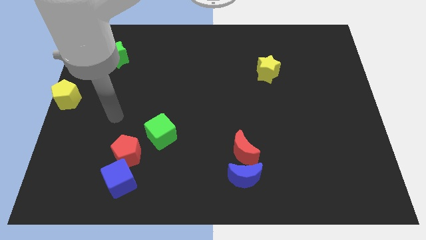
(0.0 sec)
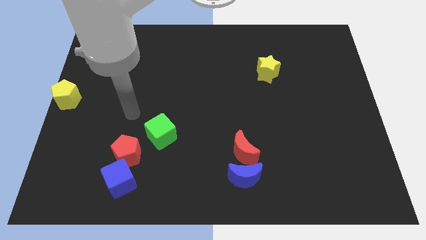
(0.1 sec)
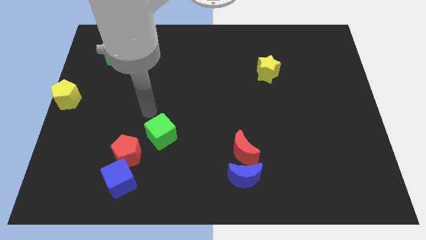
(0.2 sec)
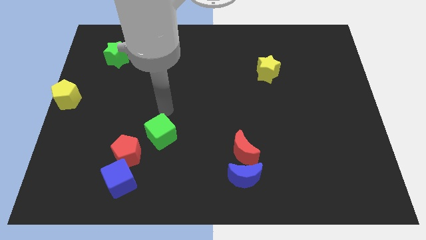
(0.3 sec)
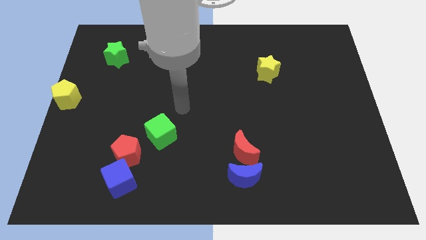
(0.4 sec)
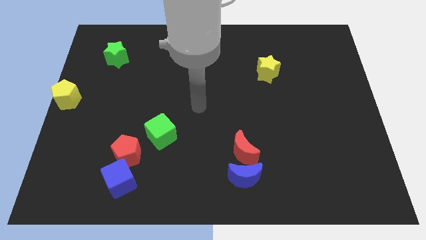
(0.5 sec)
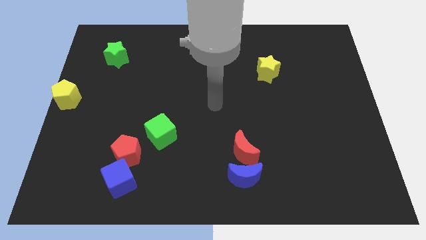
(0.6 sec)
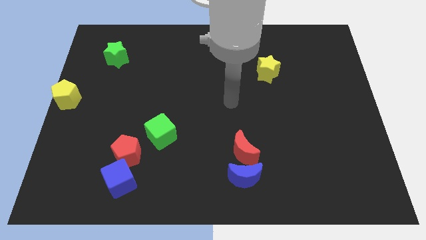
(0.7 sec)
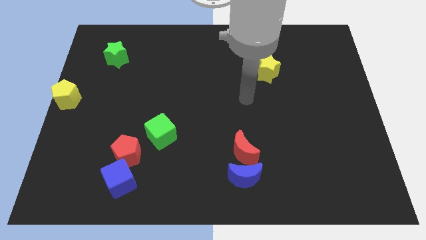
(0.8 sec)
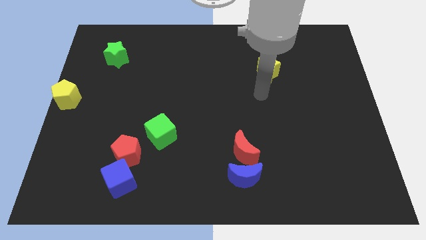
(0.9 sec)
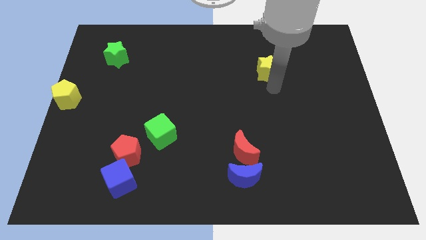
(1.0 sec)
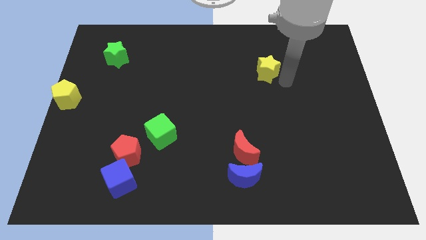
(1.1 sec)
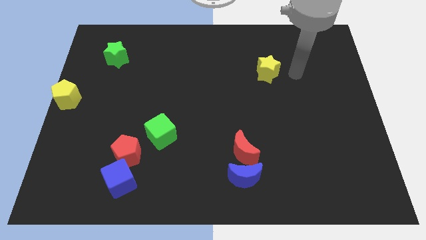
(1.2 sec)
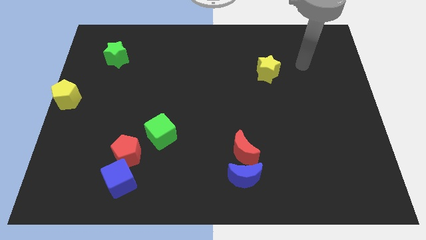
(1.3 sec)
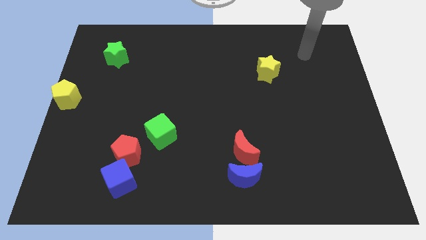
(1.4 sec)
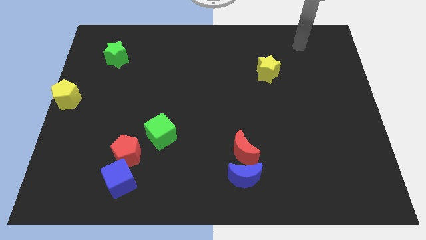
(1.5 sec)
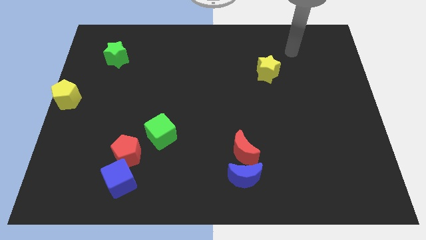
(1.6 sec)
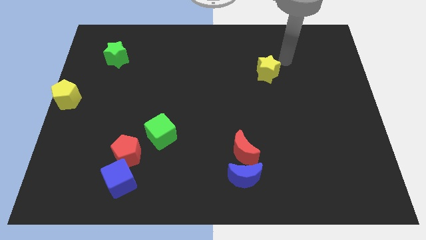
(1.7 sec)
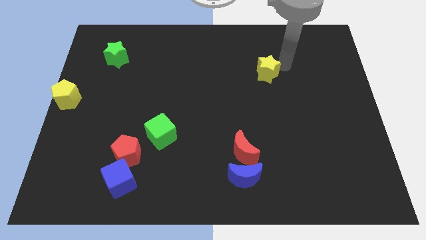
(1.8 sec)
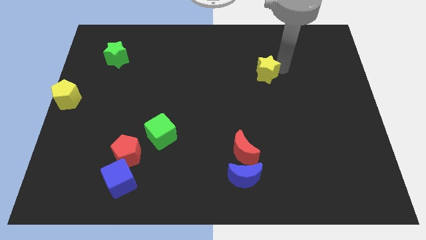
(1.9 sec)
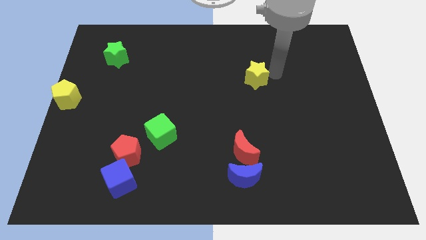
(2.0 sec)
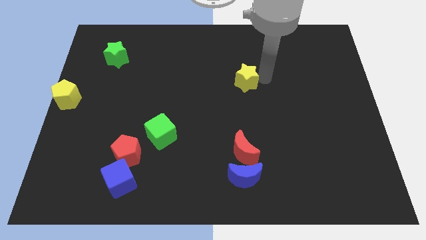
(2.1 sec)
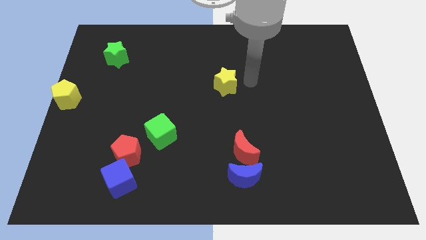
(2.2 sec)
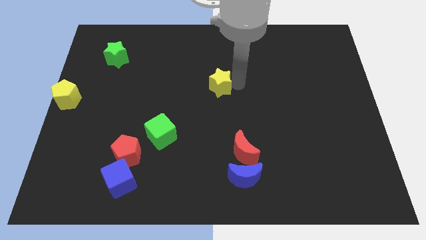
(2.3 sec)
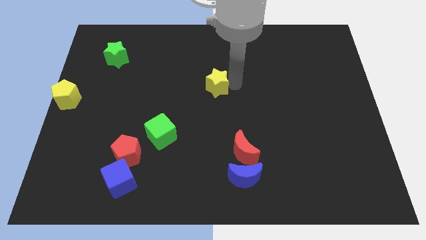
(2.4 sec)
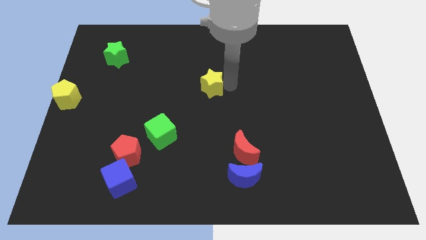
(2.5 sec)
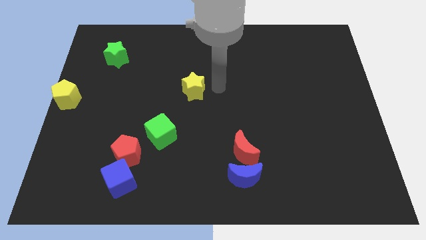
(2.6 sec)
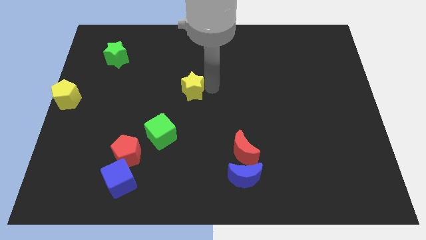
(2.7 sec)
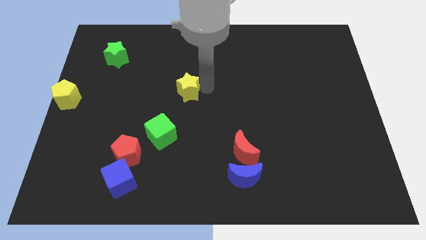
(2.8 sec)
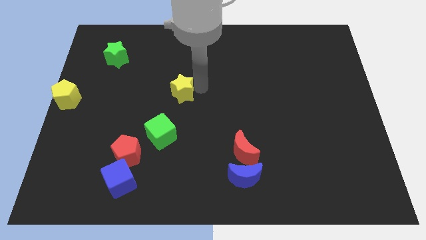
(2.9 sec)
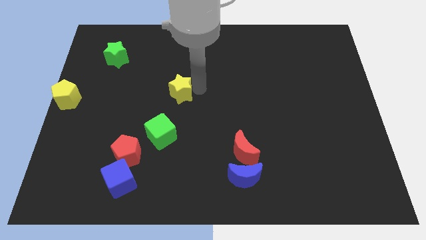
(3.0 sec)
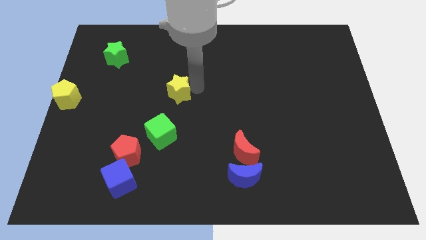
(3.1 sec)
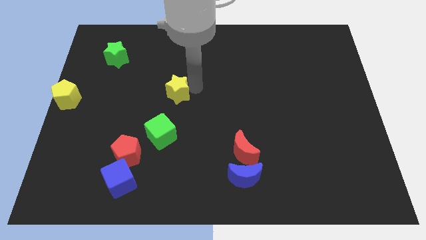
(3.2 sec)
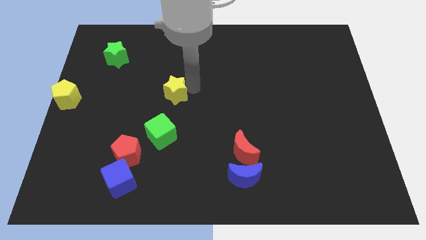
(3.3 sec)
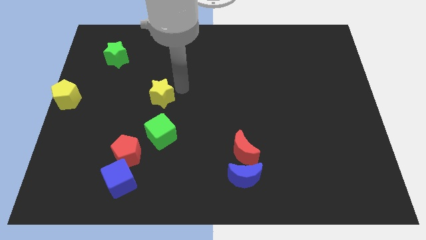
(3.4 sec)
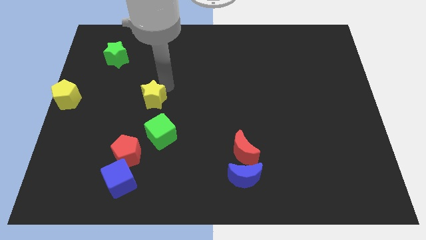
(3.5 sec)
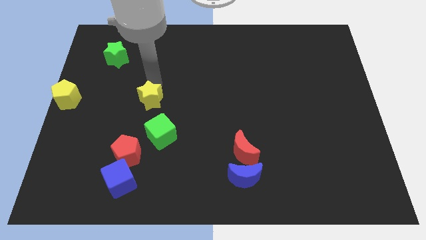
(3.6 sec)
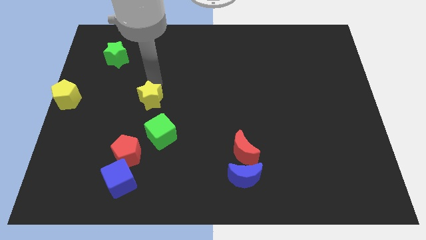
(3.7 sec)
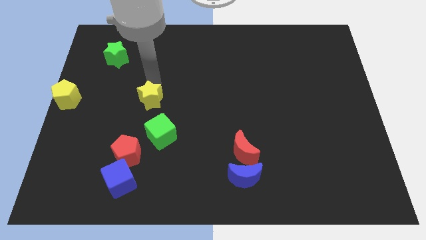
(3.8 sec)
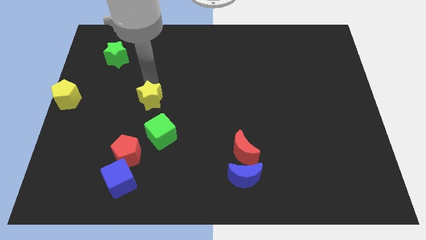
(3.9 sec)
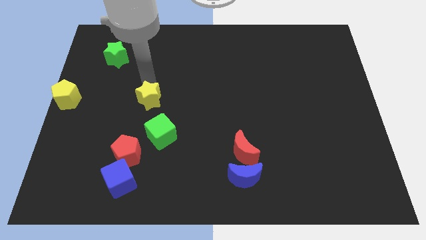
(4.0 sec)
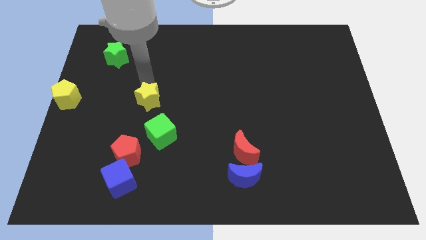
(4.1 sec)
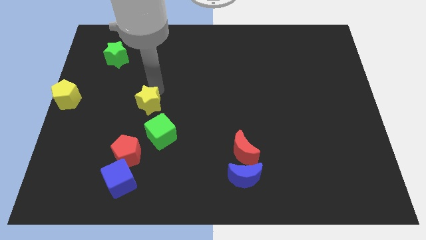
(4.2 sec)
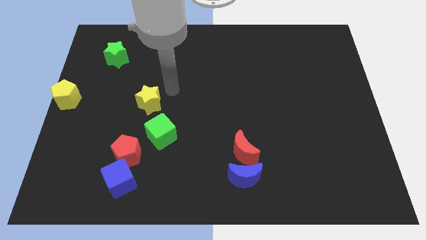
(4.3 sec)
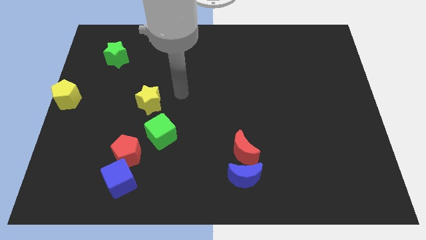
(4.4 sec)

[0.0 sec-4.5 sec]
place the yellow star above the green cube

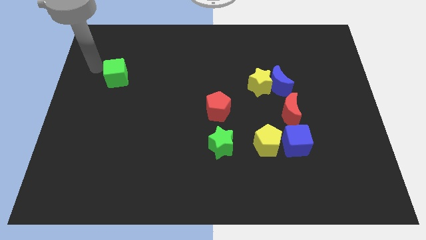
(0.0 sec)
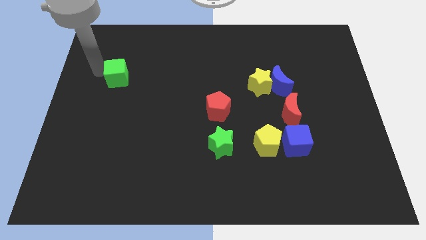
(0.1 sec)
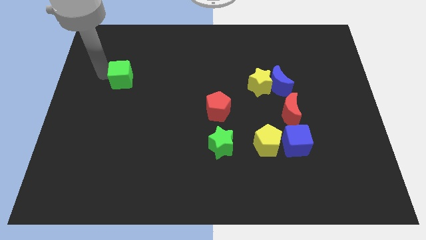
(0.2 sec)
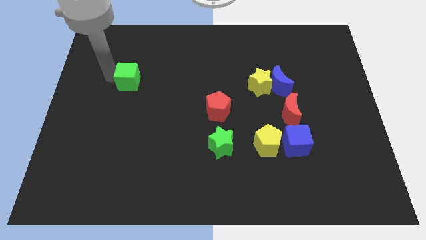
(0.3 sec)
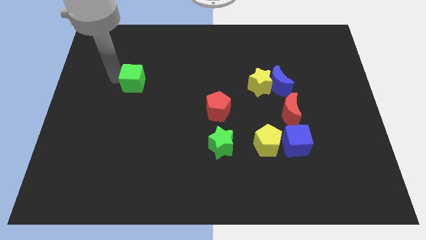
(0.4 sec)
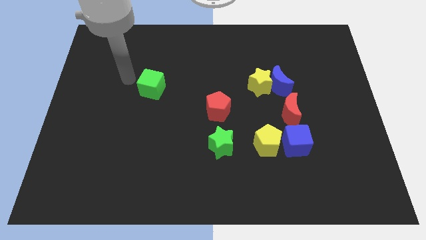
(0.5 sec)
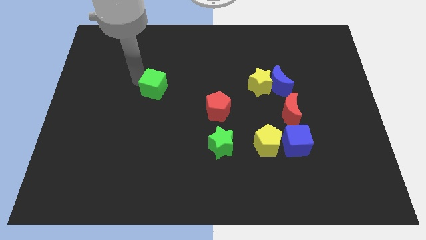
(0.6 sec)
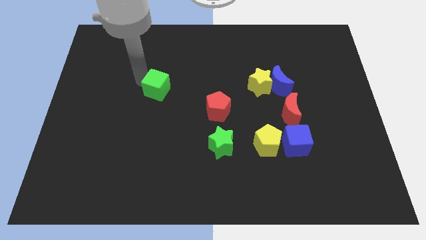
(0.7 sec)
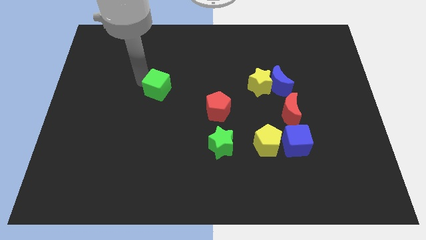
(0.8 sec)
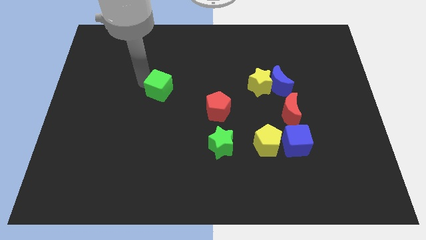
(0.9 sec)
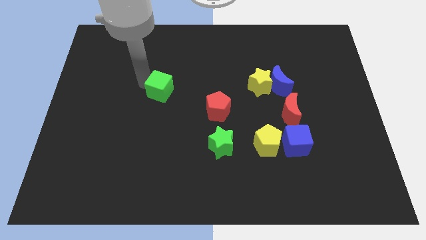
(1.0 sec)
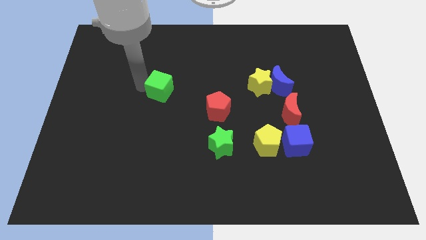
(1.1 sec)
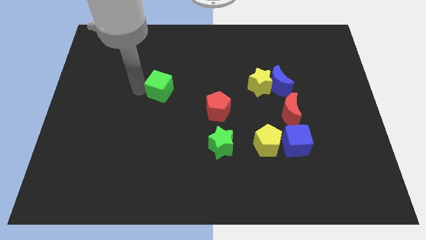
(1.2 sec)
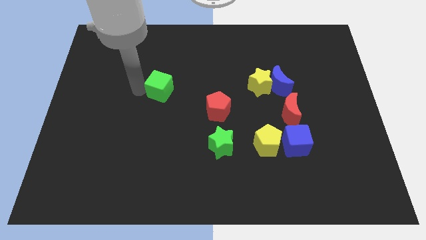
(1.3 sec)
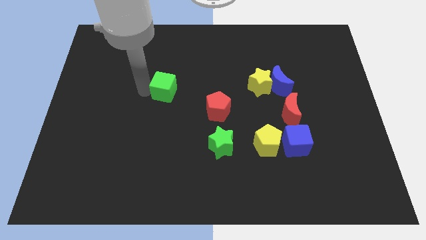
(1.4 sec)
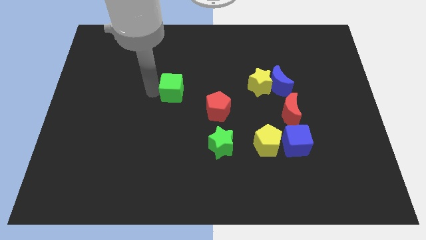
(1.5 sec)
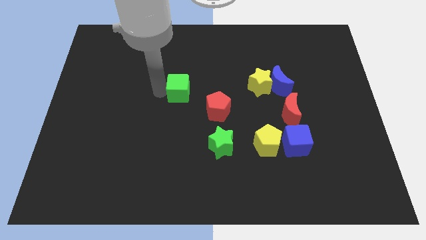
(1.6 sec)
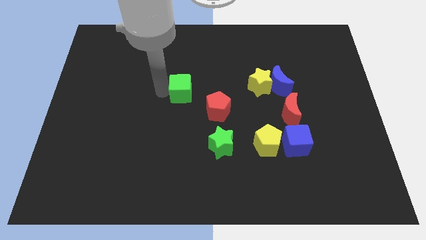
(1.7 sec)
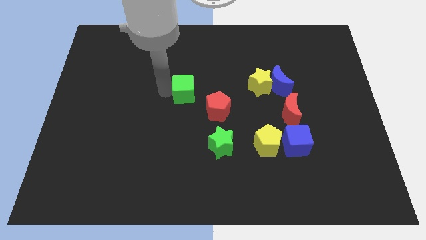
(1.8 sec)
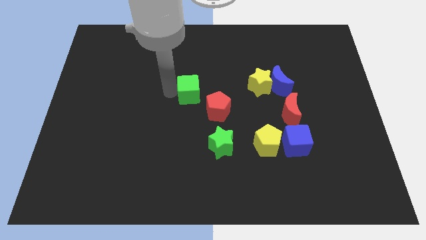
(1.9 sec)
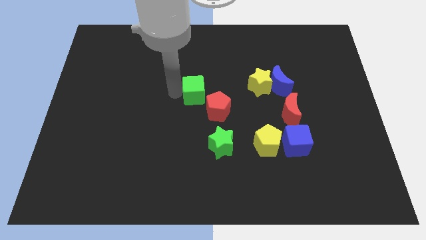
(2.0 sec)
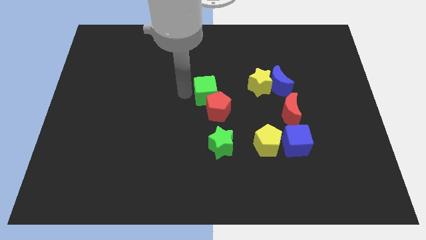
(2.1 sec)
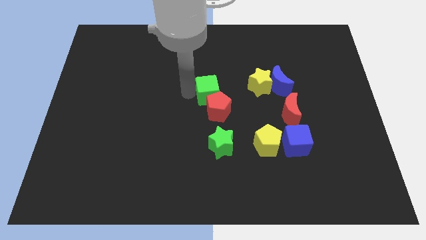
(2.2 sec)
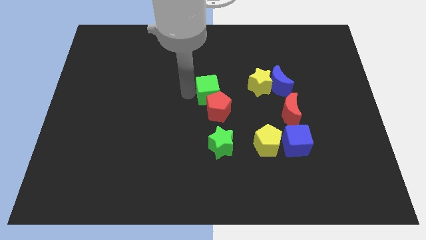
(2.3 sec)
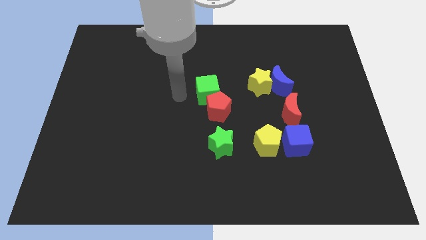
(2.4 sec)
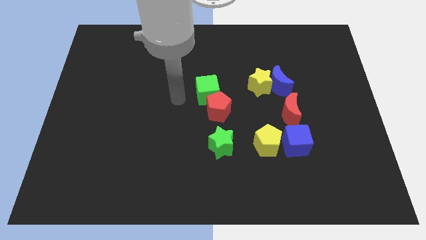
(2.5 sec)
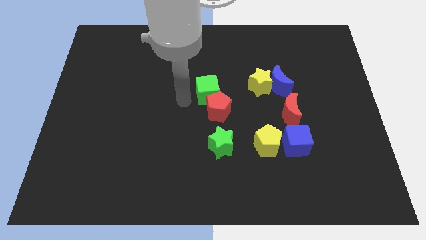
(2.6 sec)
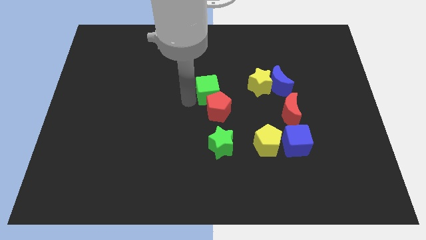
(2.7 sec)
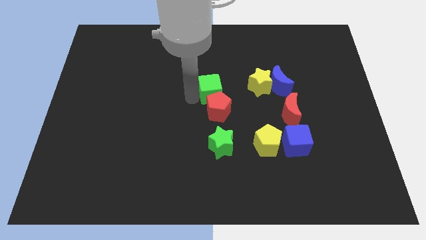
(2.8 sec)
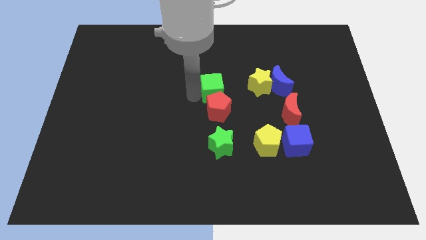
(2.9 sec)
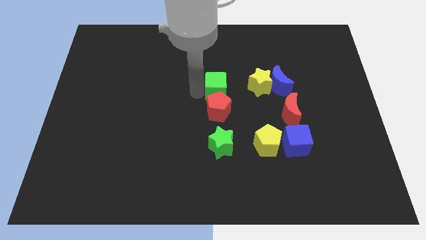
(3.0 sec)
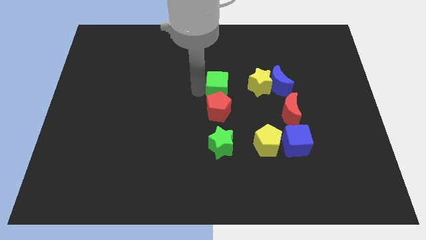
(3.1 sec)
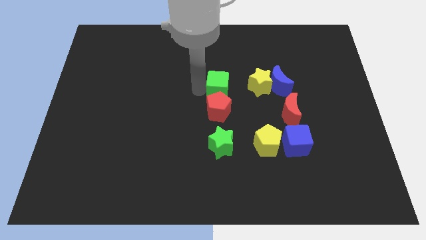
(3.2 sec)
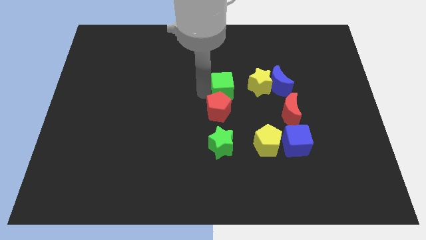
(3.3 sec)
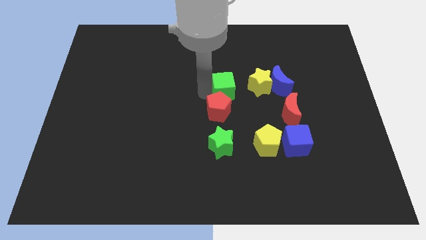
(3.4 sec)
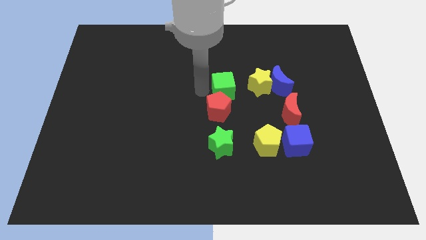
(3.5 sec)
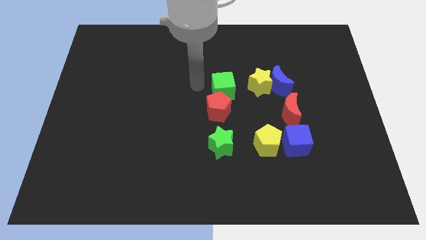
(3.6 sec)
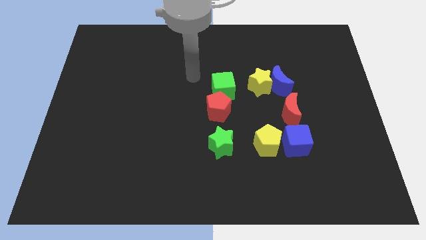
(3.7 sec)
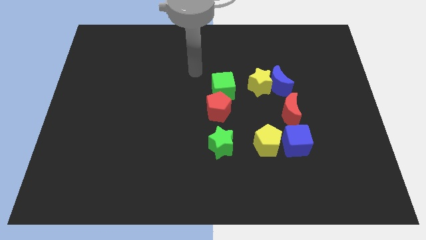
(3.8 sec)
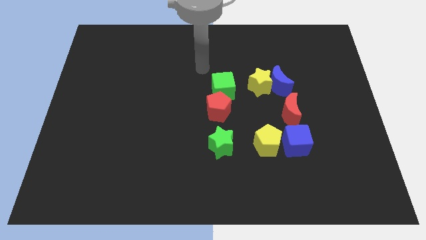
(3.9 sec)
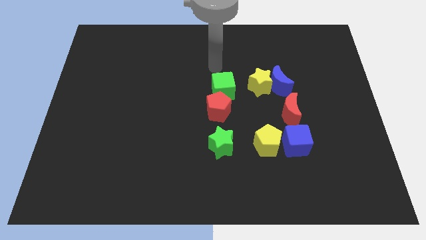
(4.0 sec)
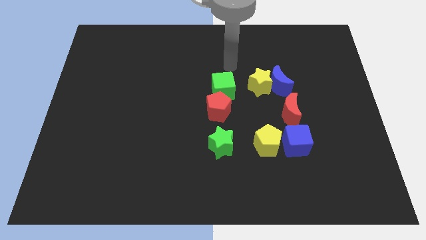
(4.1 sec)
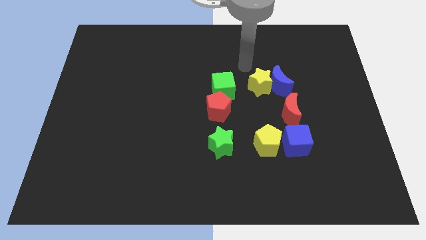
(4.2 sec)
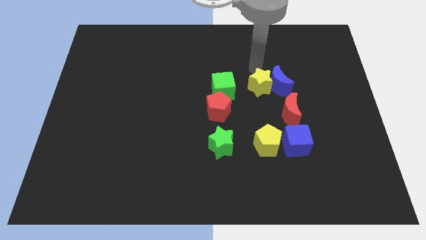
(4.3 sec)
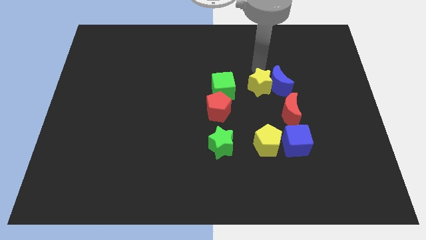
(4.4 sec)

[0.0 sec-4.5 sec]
push the green cube towards the left side of the yellow star
